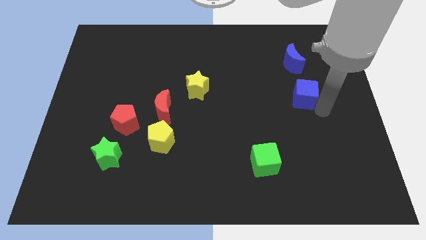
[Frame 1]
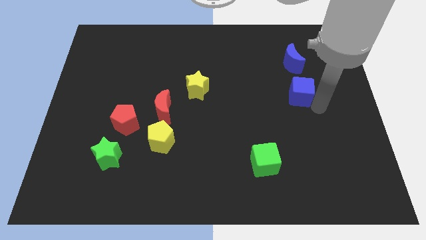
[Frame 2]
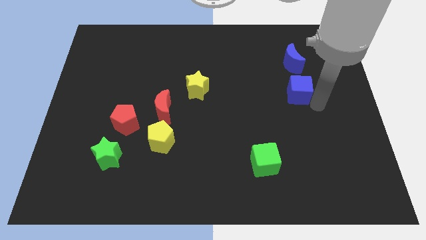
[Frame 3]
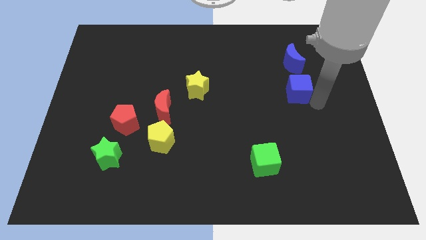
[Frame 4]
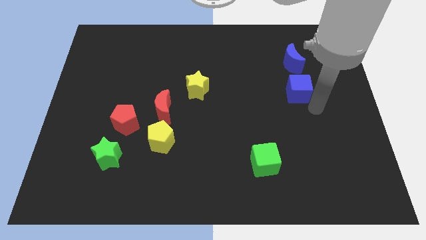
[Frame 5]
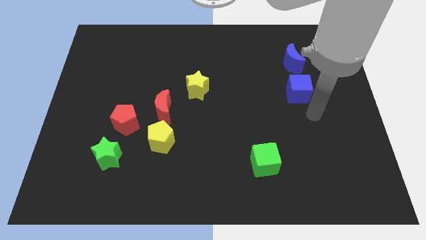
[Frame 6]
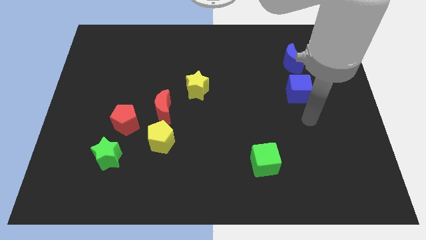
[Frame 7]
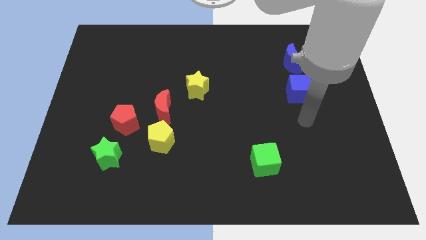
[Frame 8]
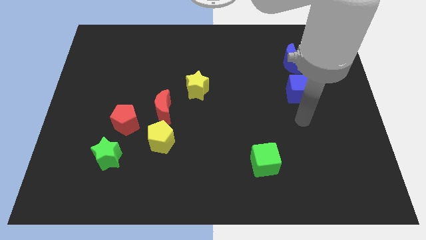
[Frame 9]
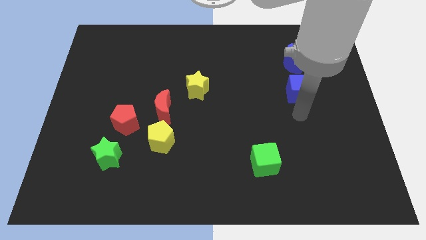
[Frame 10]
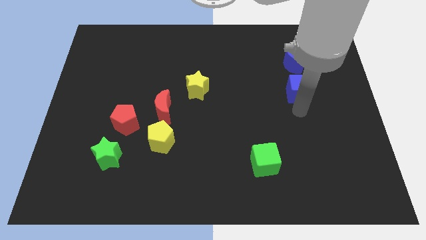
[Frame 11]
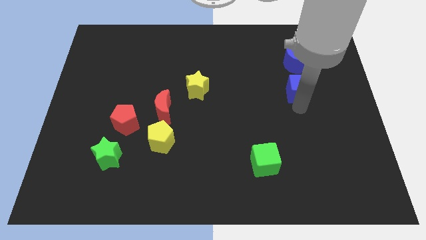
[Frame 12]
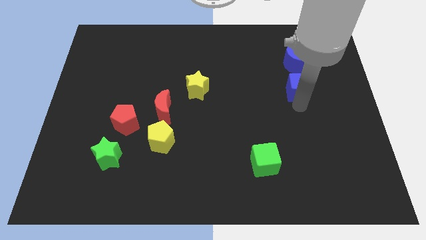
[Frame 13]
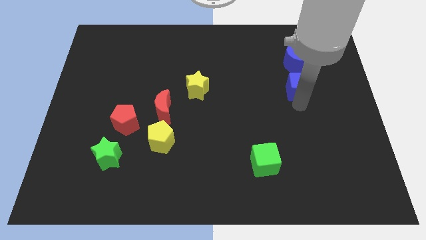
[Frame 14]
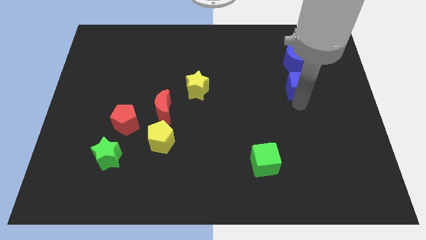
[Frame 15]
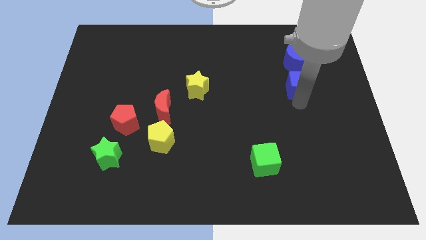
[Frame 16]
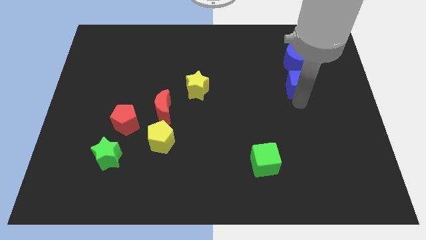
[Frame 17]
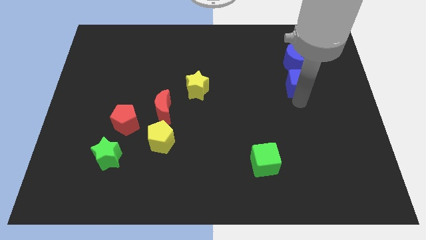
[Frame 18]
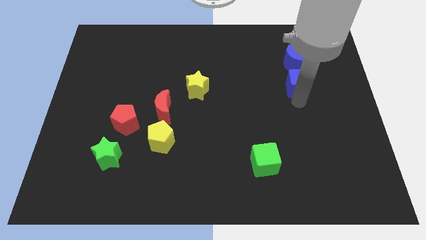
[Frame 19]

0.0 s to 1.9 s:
move the blue cube slightly towards the blue crescent

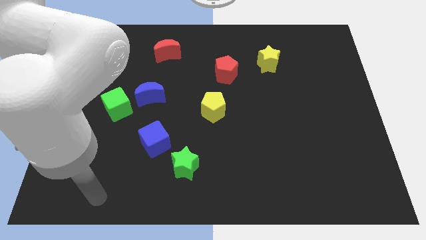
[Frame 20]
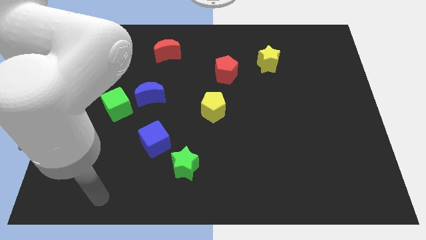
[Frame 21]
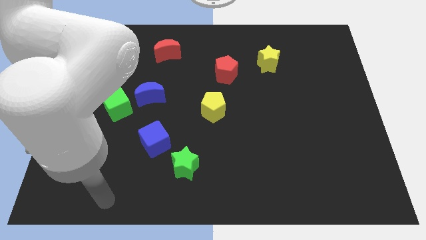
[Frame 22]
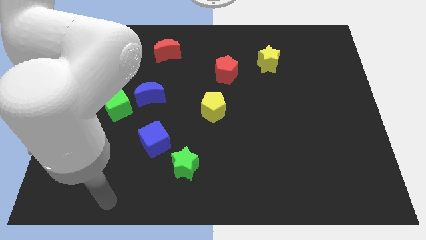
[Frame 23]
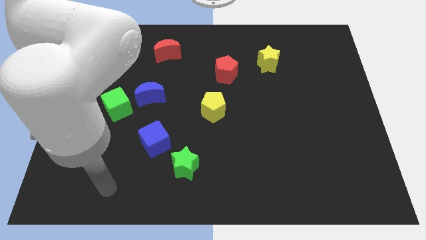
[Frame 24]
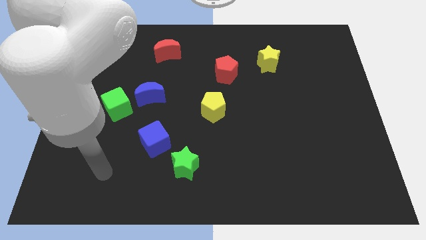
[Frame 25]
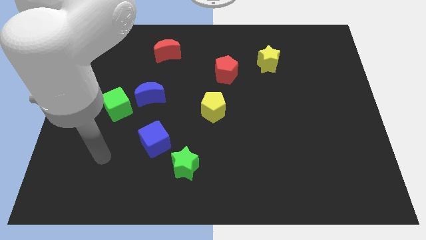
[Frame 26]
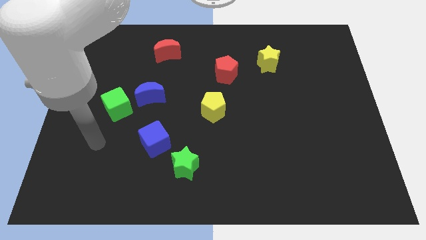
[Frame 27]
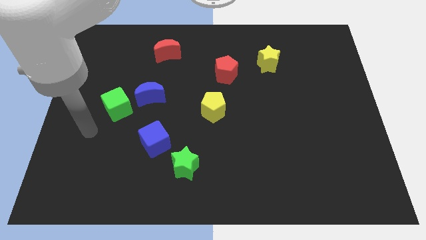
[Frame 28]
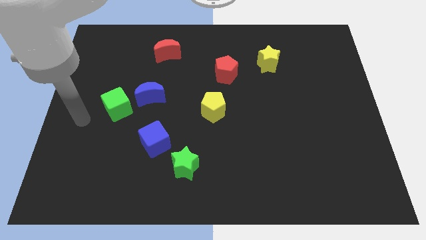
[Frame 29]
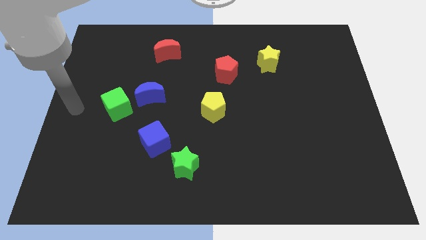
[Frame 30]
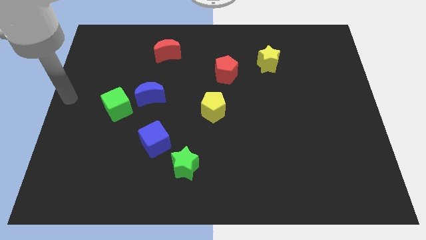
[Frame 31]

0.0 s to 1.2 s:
place arm on the center left

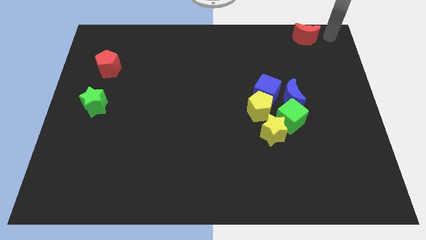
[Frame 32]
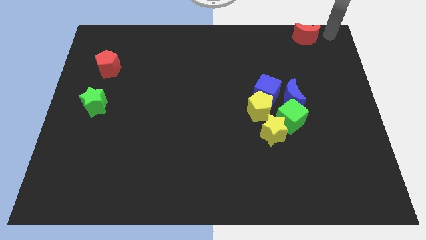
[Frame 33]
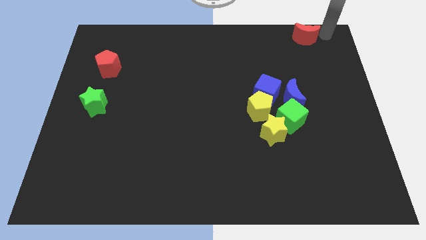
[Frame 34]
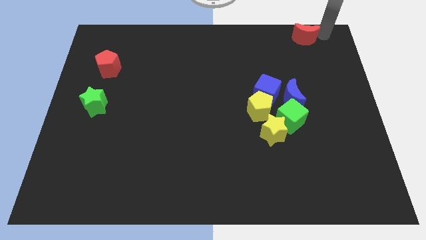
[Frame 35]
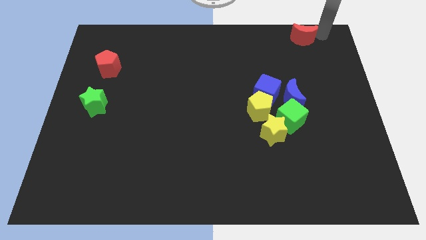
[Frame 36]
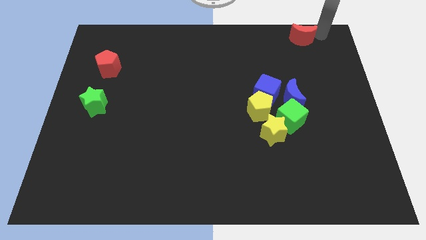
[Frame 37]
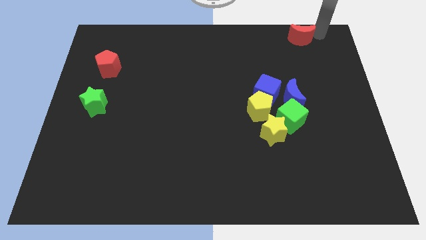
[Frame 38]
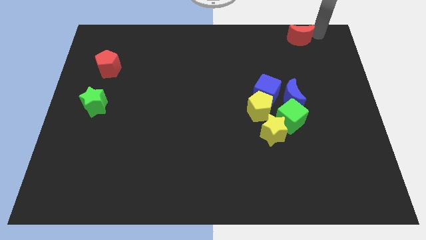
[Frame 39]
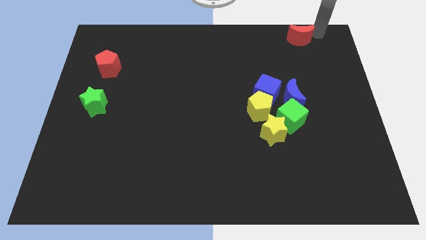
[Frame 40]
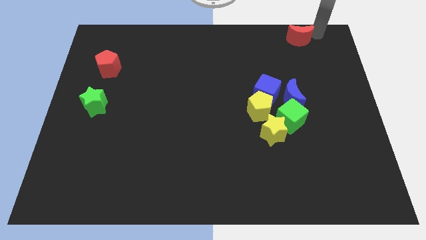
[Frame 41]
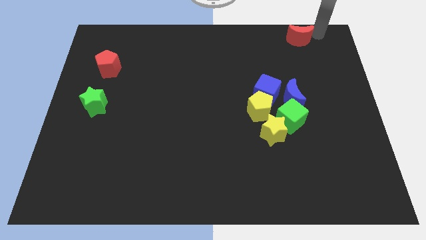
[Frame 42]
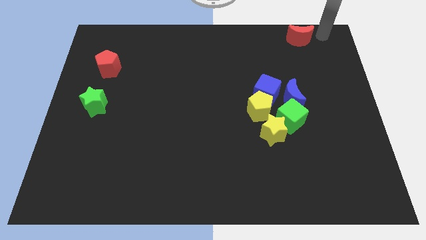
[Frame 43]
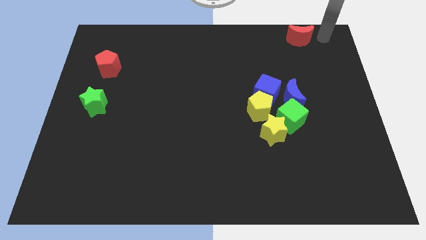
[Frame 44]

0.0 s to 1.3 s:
slightly move the red moon towards left

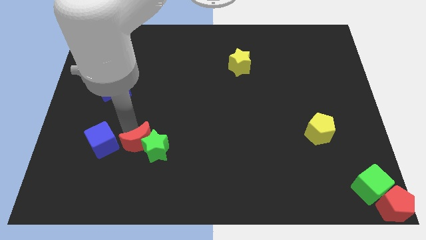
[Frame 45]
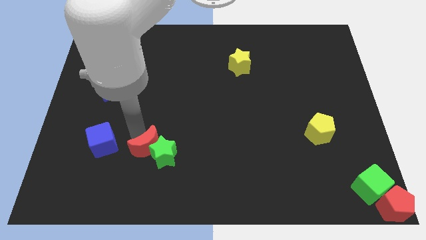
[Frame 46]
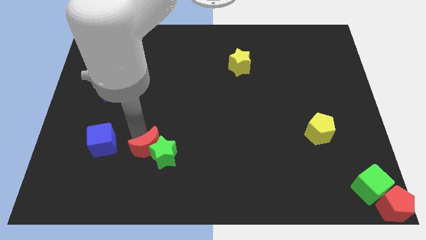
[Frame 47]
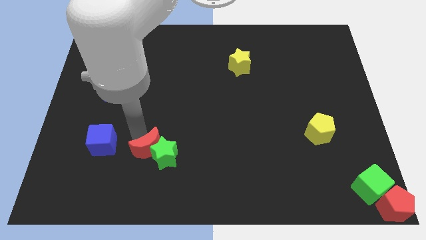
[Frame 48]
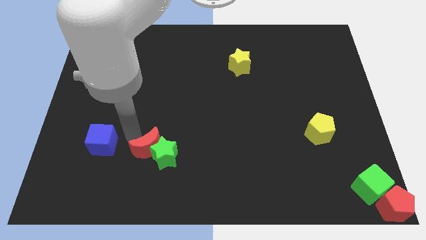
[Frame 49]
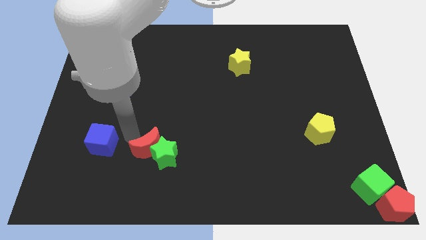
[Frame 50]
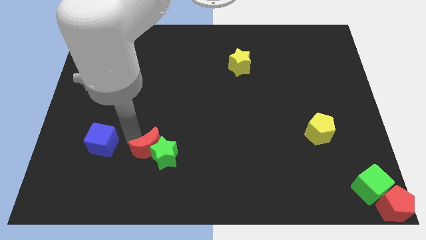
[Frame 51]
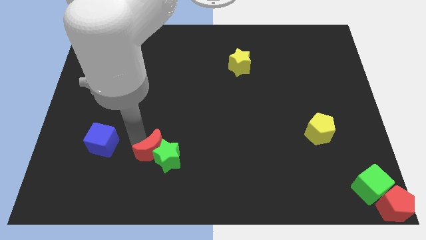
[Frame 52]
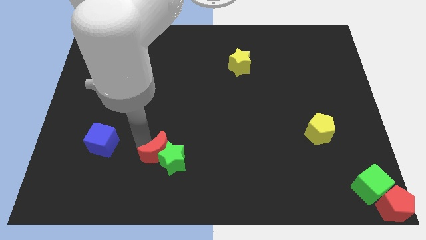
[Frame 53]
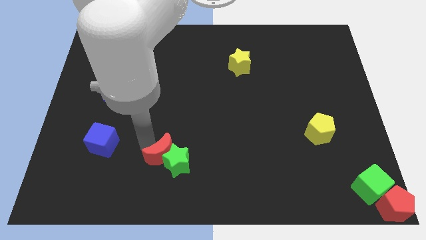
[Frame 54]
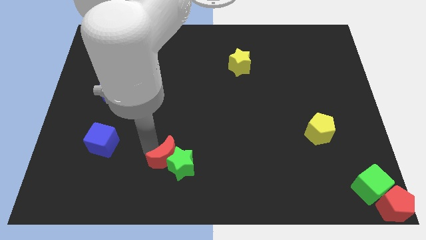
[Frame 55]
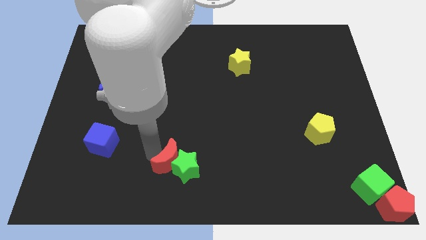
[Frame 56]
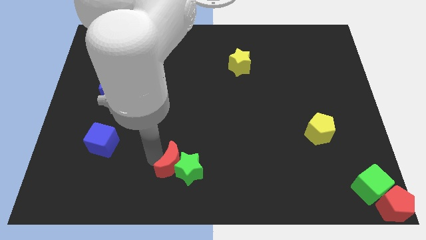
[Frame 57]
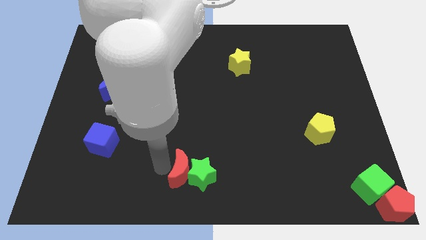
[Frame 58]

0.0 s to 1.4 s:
push the red crescent towards the bottom center along with the green star

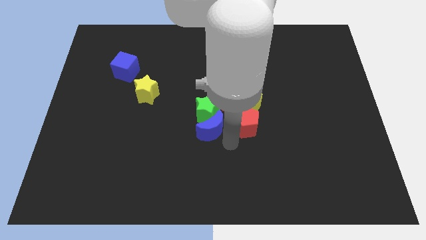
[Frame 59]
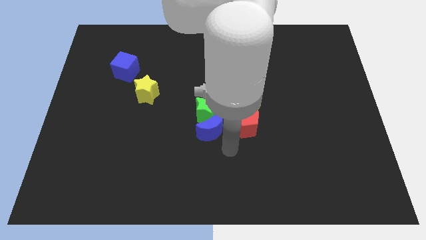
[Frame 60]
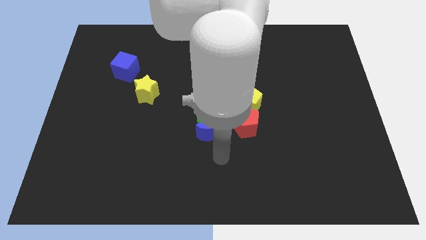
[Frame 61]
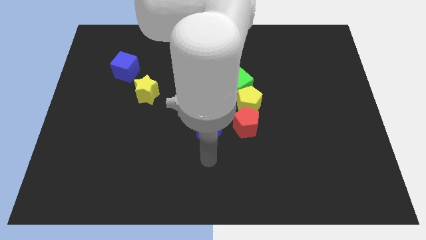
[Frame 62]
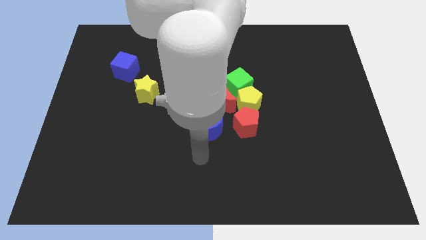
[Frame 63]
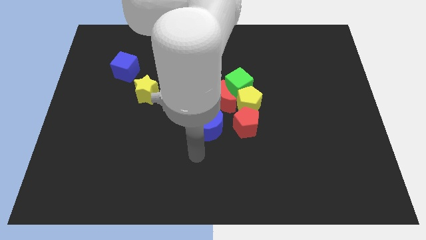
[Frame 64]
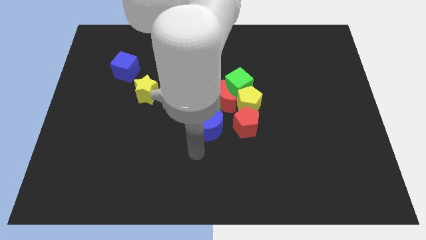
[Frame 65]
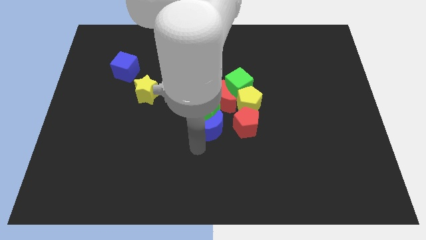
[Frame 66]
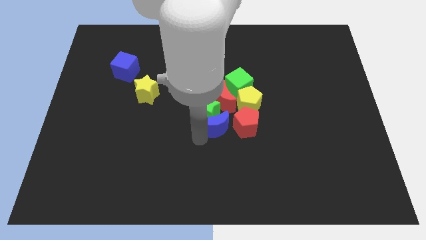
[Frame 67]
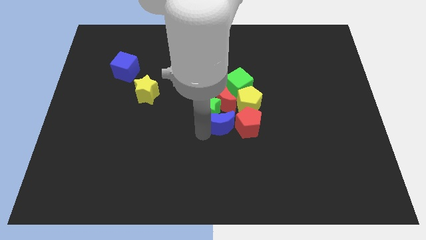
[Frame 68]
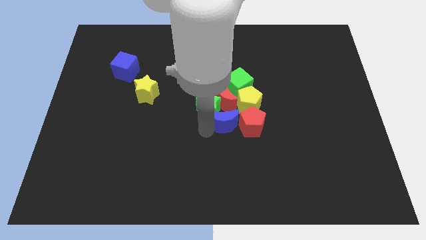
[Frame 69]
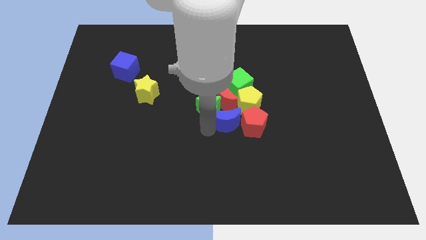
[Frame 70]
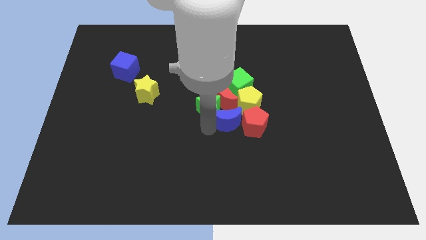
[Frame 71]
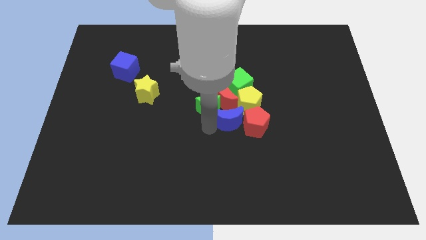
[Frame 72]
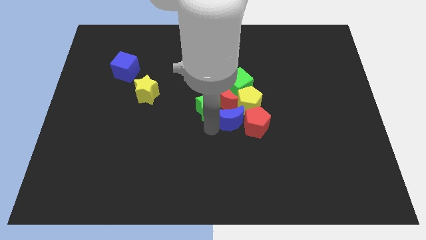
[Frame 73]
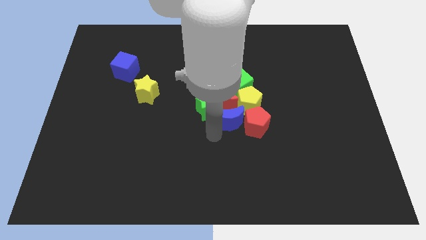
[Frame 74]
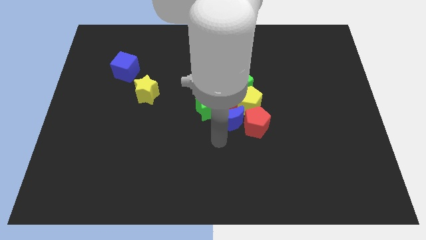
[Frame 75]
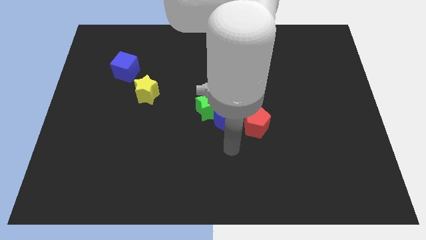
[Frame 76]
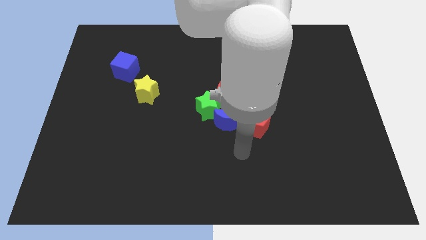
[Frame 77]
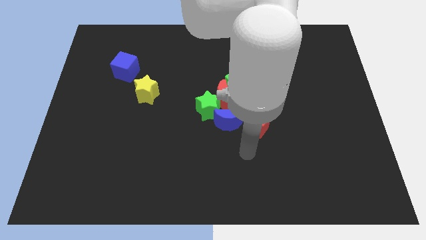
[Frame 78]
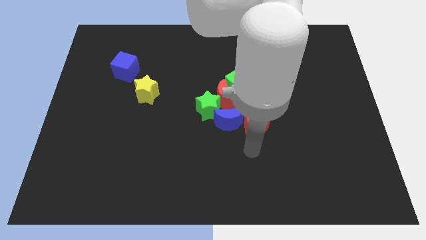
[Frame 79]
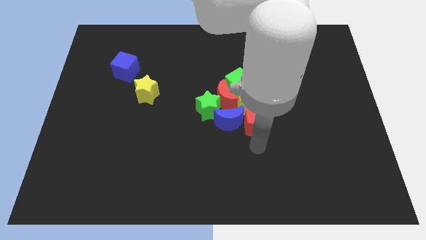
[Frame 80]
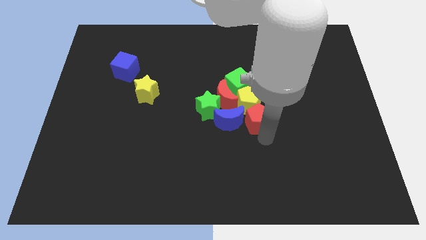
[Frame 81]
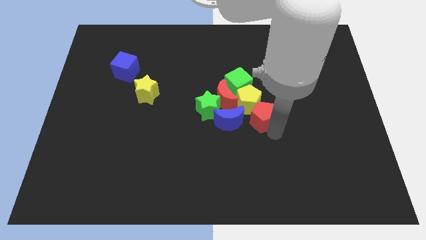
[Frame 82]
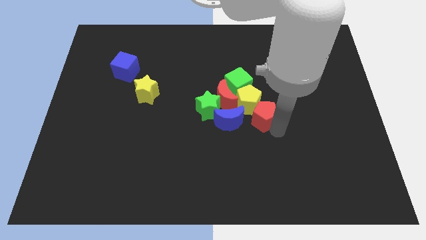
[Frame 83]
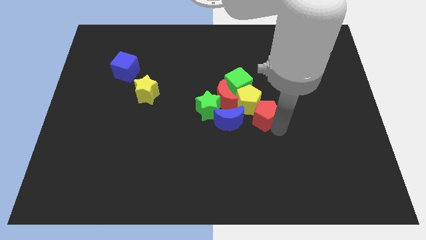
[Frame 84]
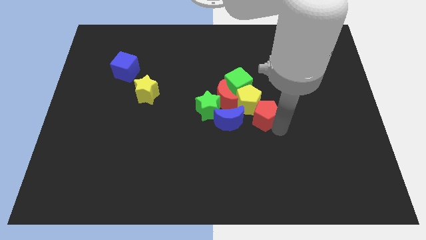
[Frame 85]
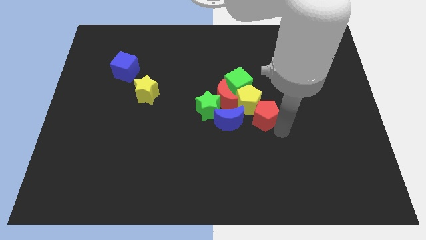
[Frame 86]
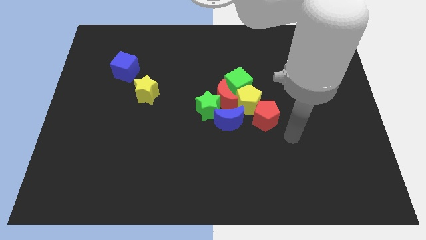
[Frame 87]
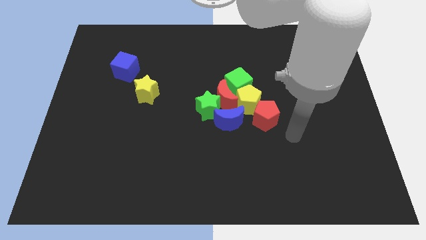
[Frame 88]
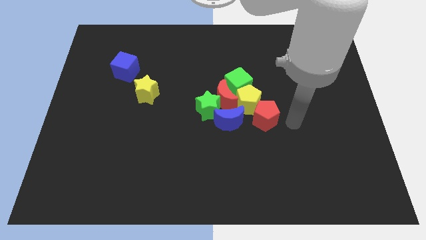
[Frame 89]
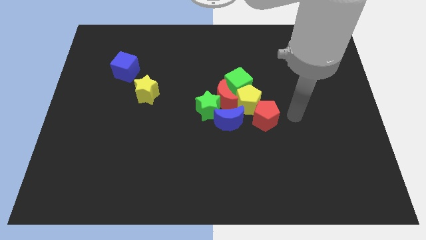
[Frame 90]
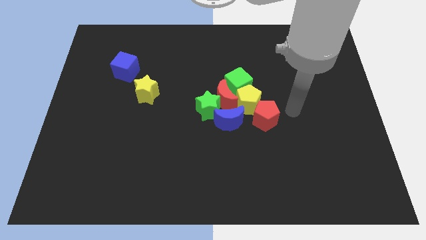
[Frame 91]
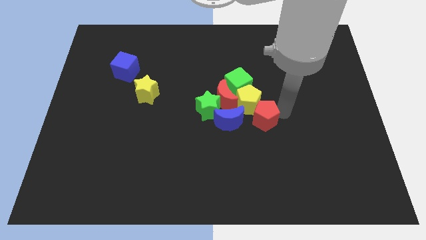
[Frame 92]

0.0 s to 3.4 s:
push the blue crescent to the bottom of red red crescent
